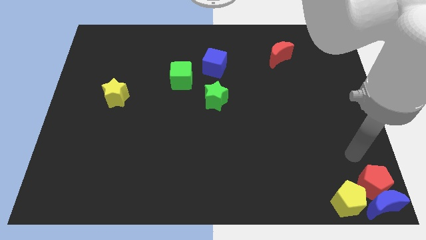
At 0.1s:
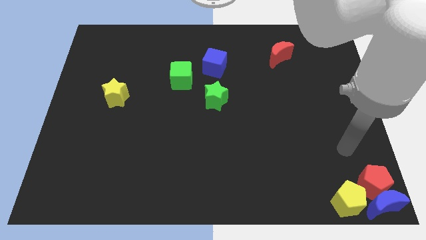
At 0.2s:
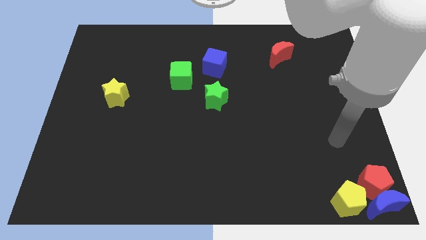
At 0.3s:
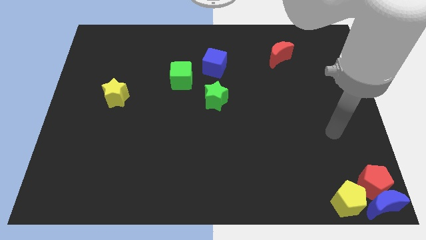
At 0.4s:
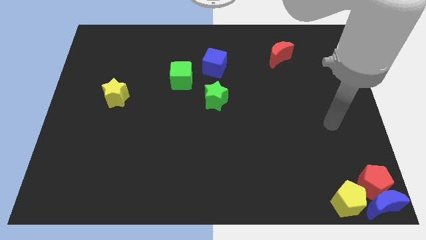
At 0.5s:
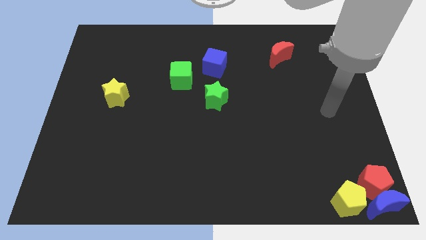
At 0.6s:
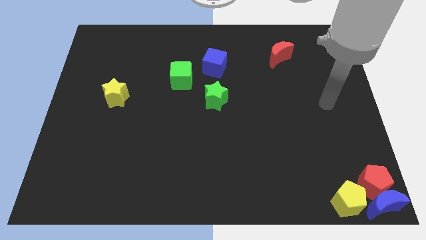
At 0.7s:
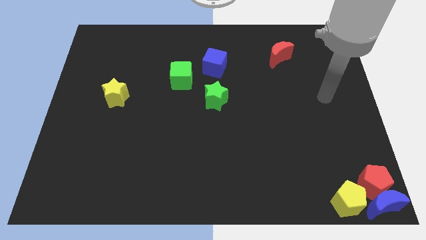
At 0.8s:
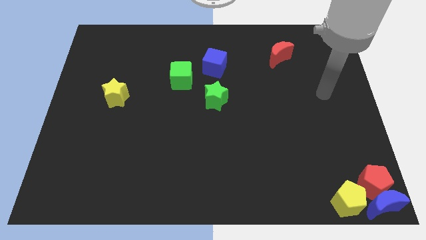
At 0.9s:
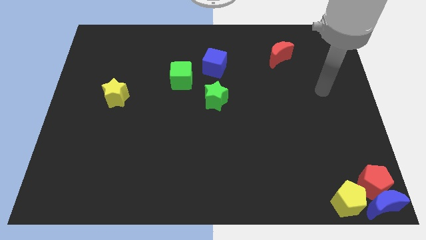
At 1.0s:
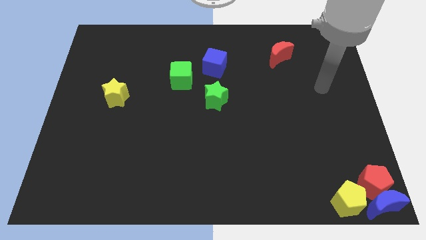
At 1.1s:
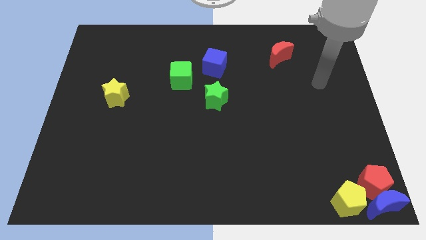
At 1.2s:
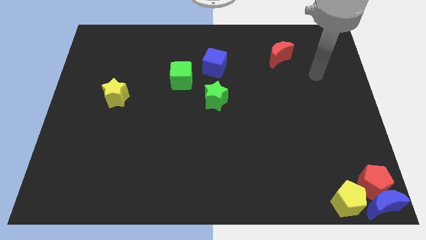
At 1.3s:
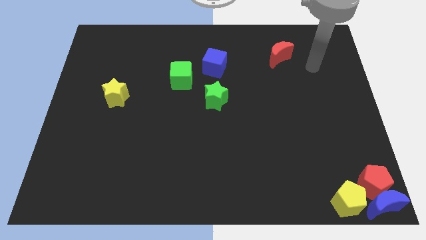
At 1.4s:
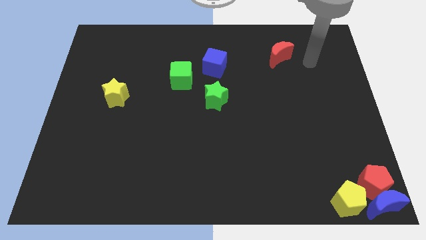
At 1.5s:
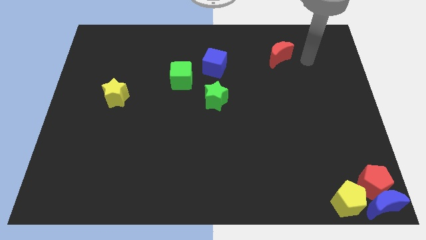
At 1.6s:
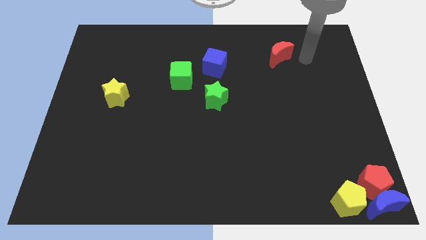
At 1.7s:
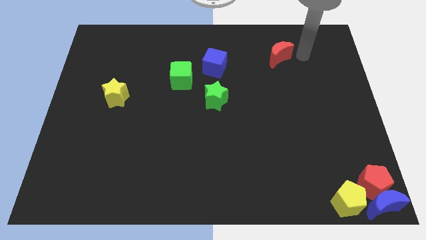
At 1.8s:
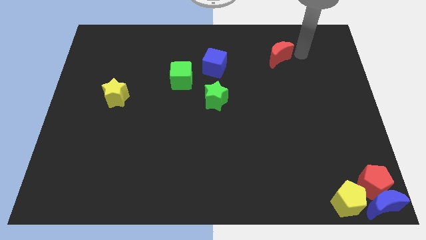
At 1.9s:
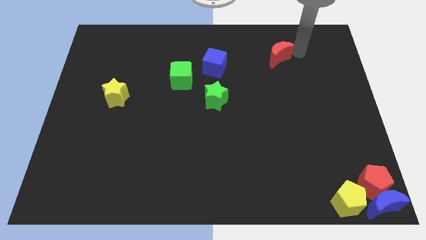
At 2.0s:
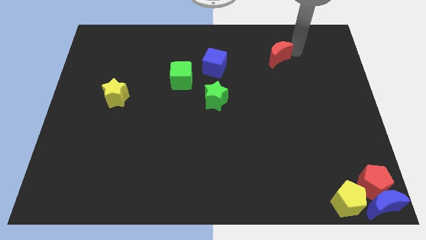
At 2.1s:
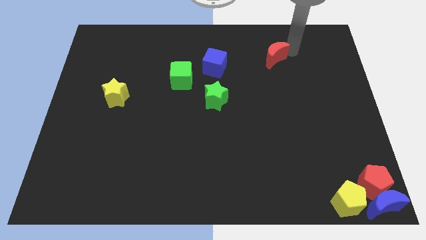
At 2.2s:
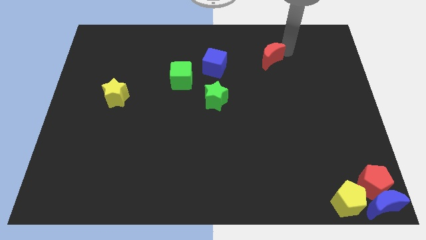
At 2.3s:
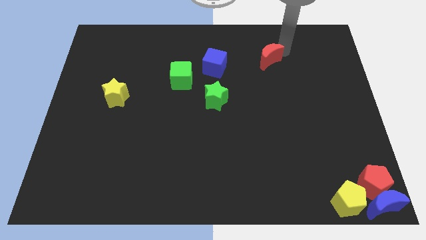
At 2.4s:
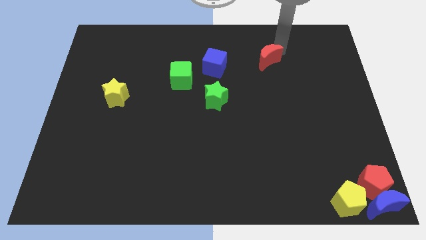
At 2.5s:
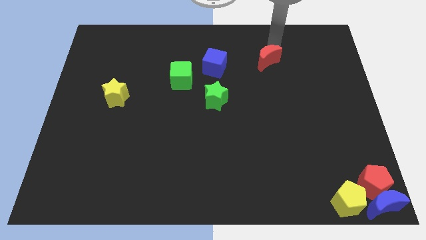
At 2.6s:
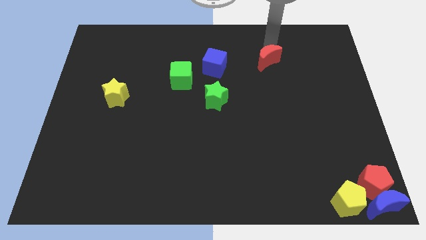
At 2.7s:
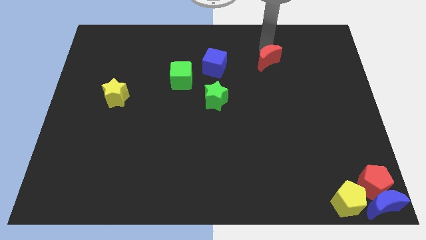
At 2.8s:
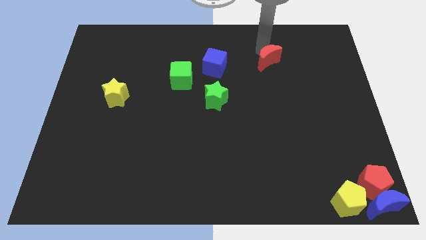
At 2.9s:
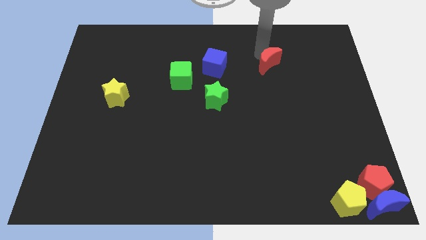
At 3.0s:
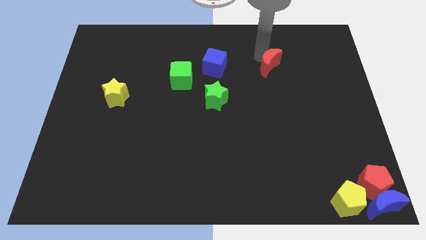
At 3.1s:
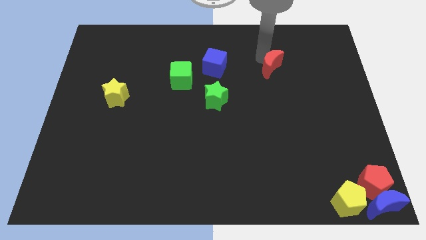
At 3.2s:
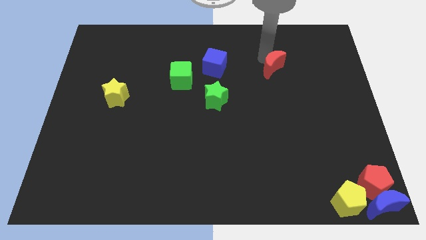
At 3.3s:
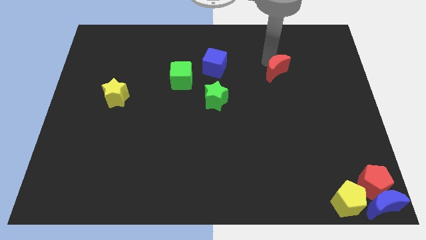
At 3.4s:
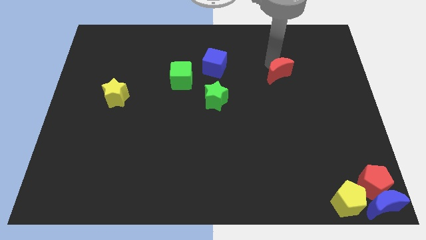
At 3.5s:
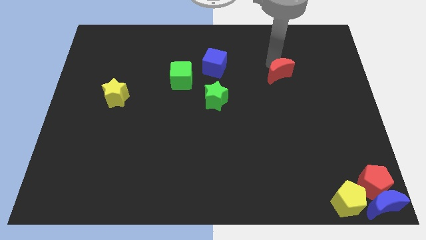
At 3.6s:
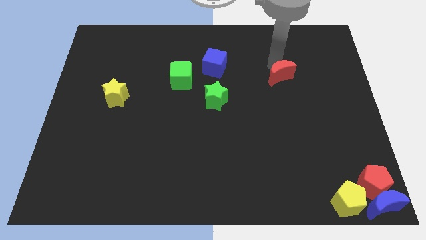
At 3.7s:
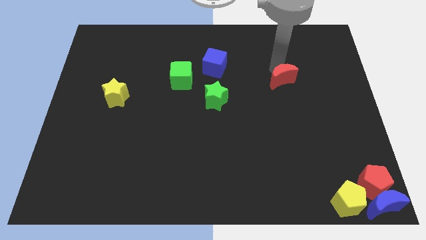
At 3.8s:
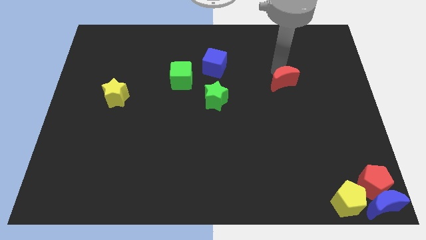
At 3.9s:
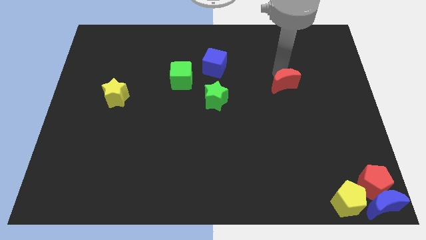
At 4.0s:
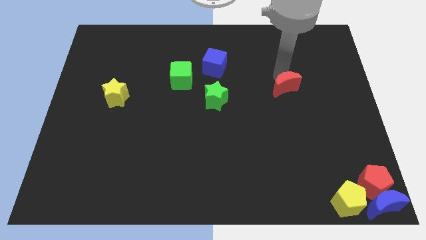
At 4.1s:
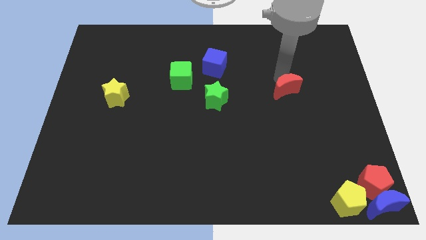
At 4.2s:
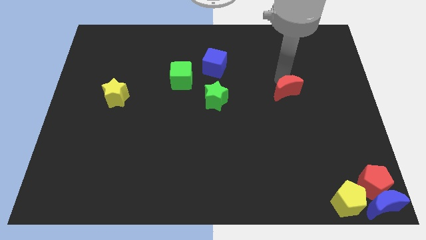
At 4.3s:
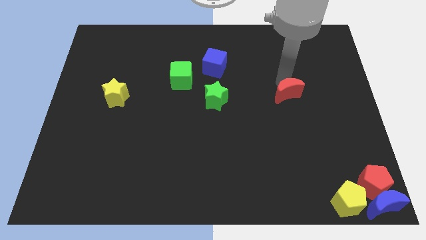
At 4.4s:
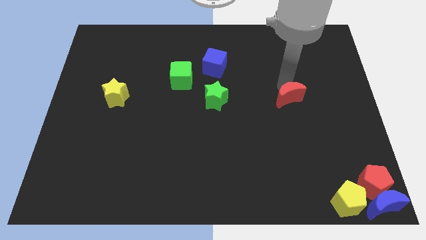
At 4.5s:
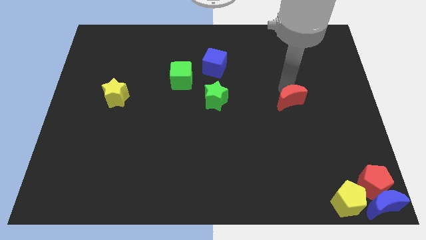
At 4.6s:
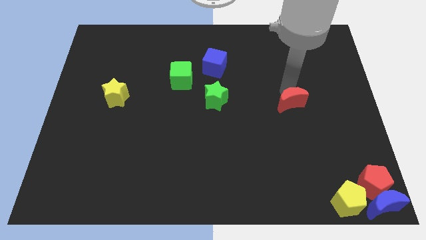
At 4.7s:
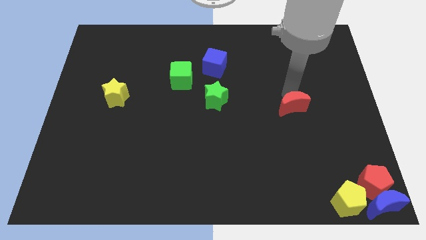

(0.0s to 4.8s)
place the red moon horizontally to the right side of the green star

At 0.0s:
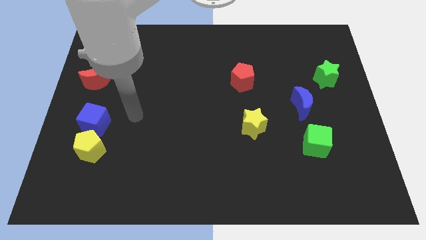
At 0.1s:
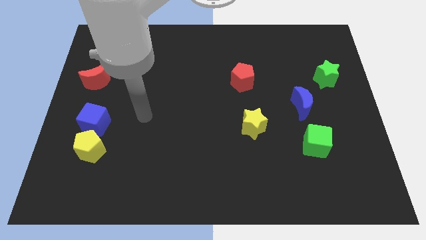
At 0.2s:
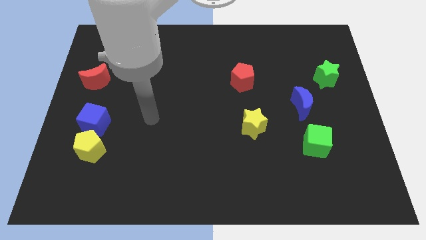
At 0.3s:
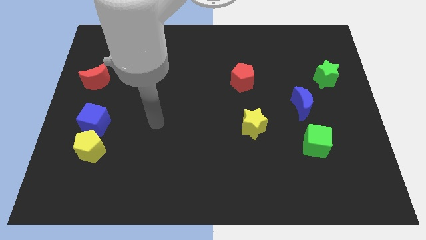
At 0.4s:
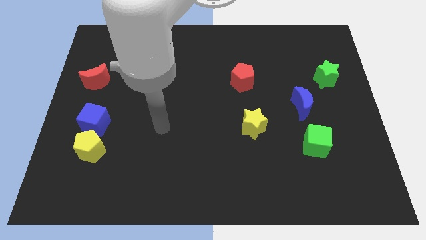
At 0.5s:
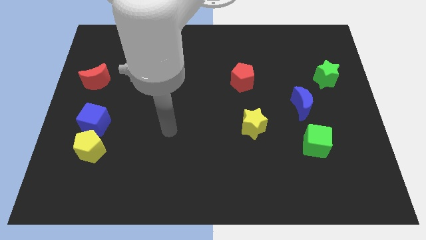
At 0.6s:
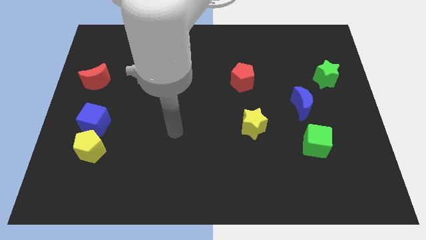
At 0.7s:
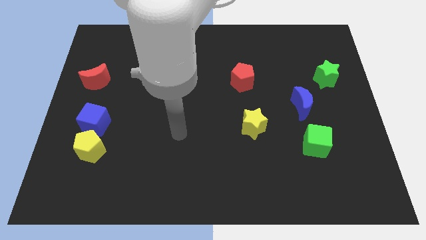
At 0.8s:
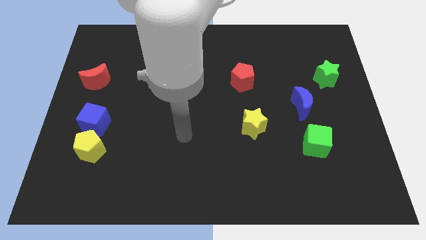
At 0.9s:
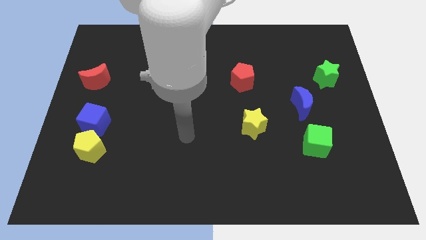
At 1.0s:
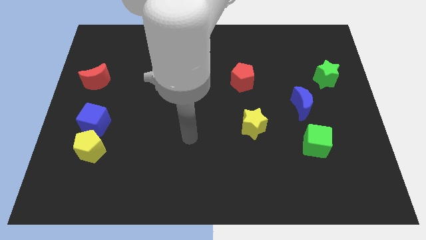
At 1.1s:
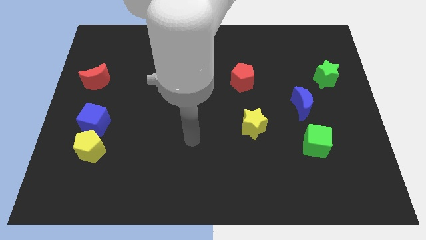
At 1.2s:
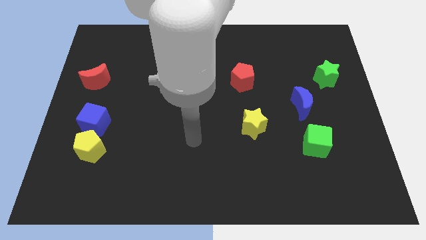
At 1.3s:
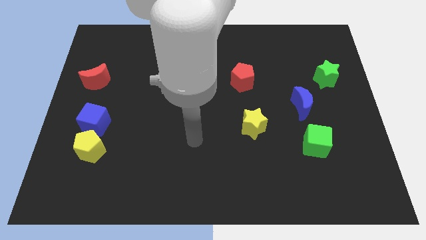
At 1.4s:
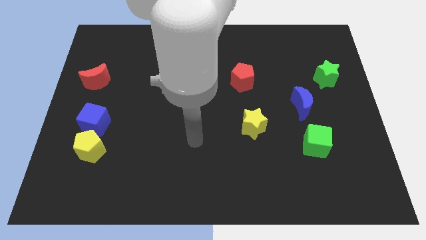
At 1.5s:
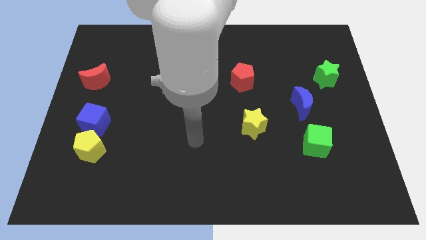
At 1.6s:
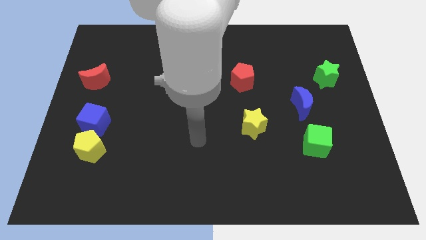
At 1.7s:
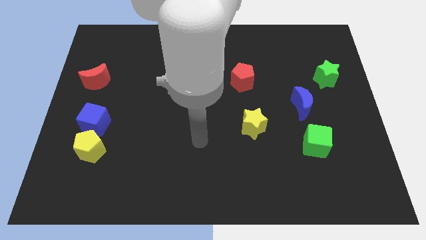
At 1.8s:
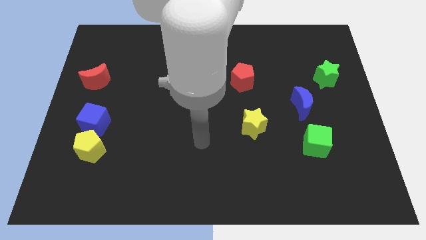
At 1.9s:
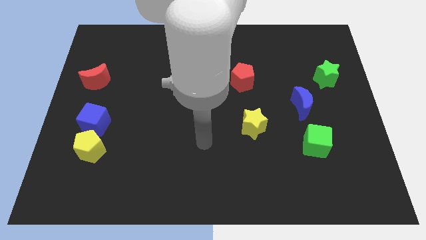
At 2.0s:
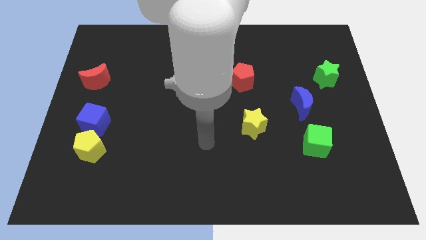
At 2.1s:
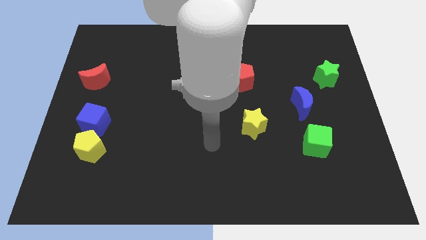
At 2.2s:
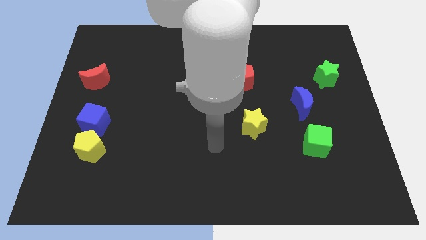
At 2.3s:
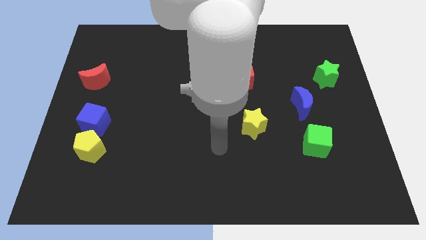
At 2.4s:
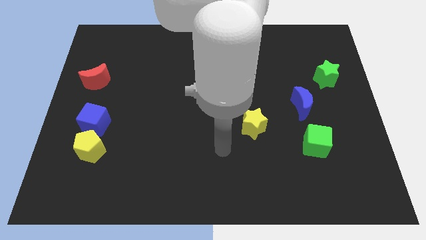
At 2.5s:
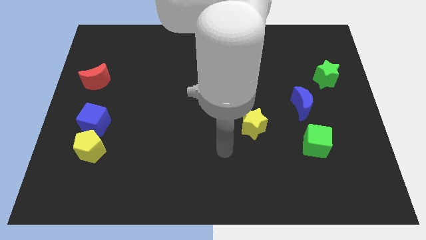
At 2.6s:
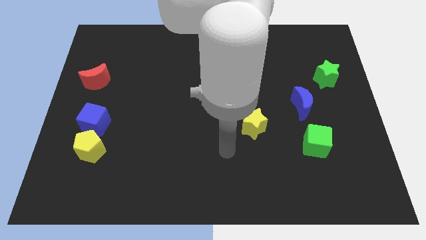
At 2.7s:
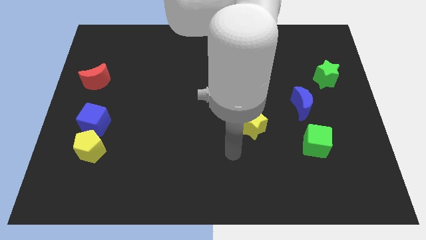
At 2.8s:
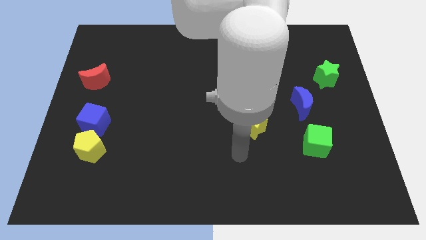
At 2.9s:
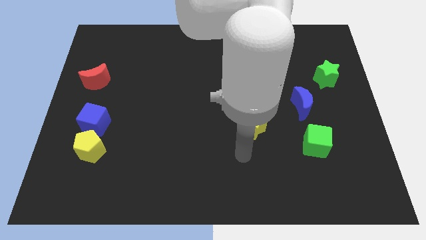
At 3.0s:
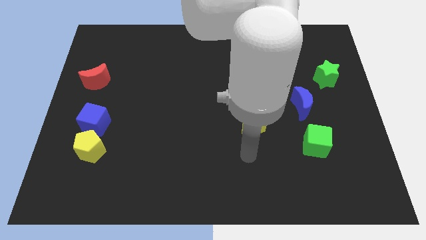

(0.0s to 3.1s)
move the arm below the yellow star

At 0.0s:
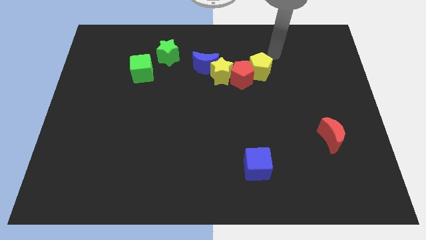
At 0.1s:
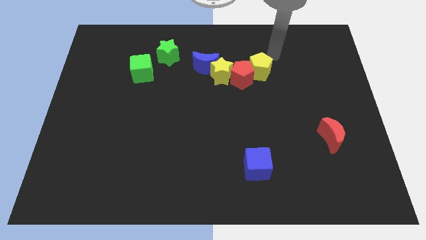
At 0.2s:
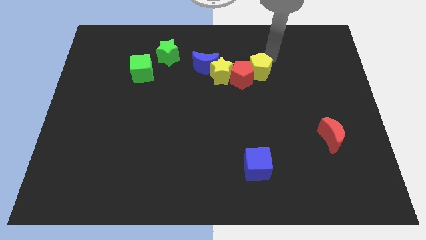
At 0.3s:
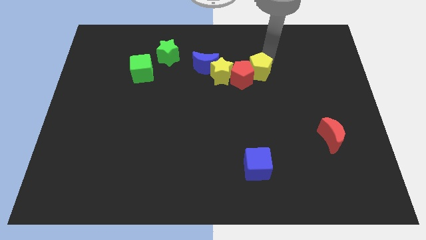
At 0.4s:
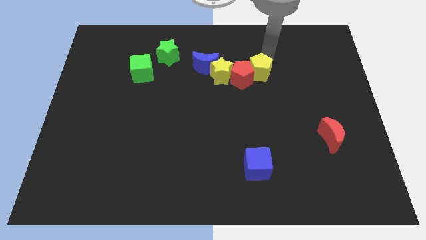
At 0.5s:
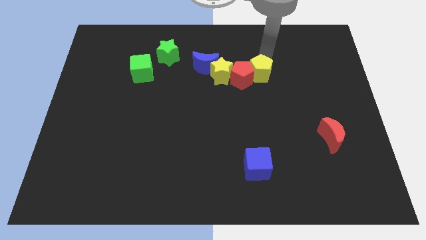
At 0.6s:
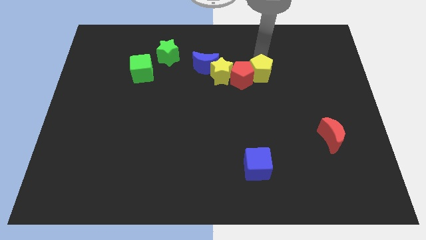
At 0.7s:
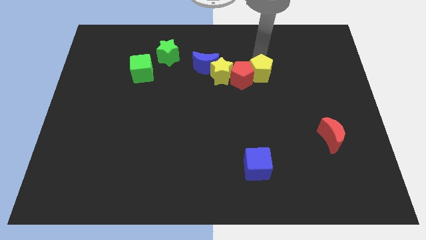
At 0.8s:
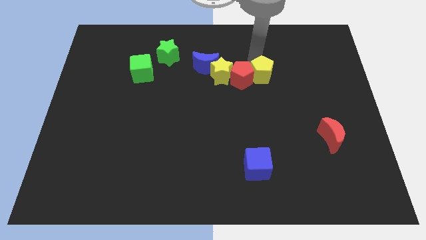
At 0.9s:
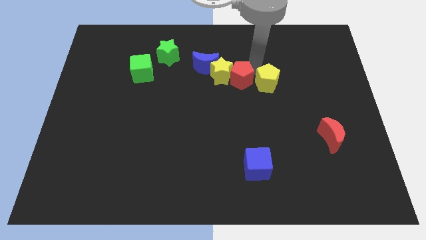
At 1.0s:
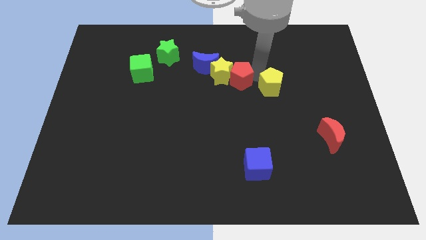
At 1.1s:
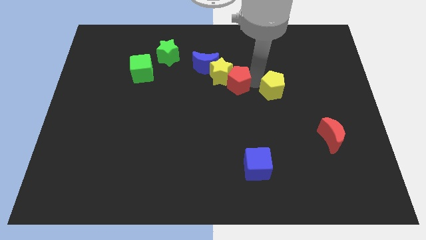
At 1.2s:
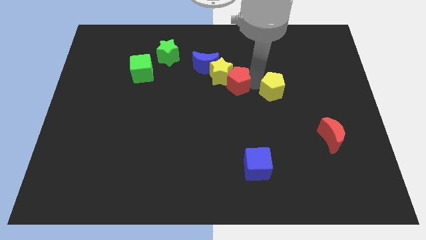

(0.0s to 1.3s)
push the yellow pentagon slightly down
